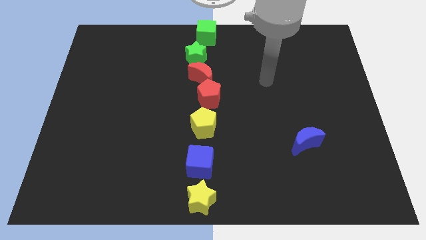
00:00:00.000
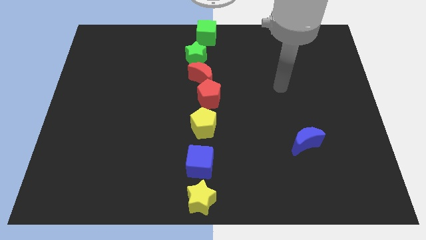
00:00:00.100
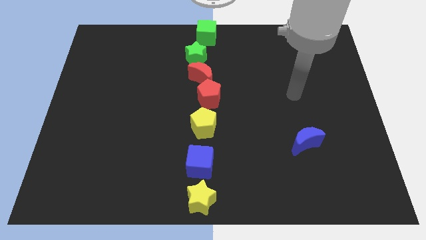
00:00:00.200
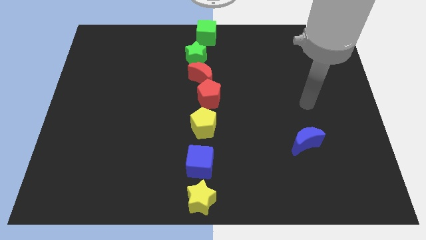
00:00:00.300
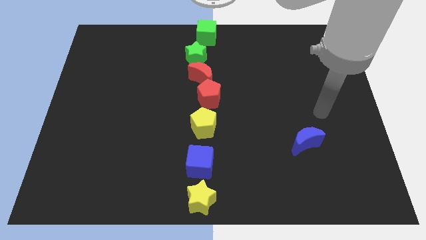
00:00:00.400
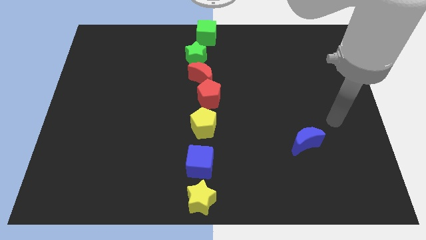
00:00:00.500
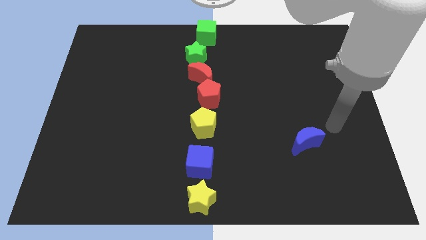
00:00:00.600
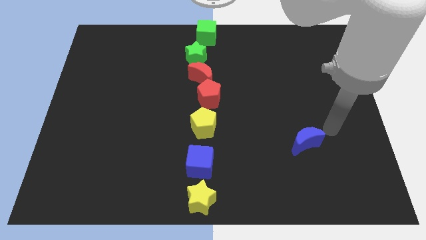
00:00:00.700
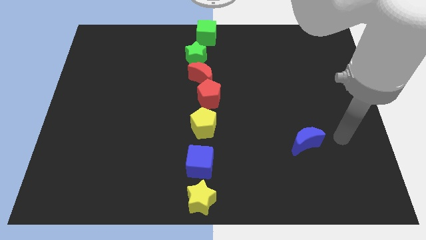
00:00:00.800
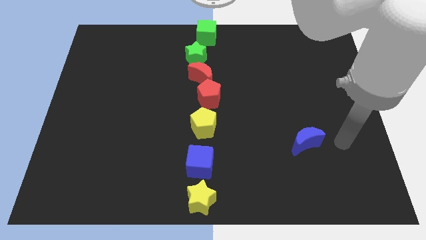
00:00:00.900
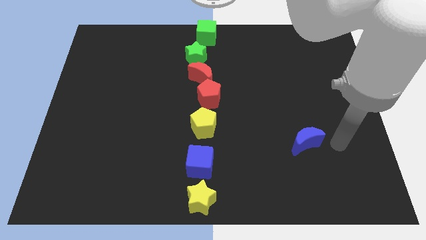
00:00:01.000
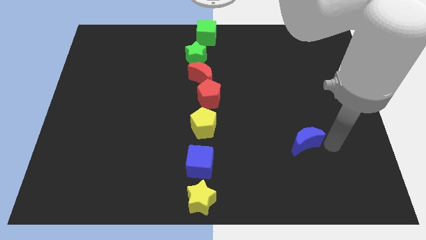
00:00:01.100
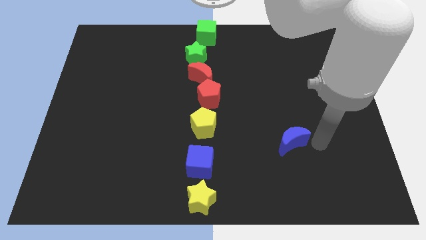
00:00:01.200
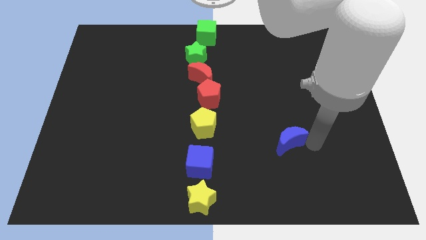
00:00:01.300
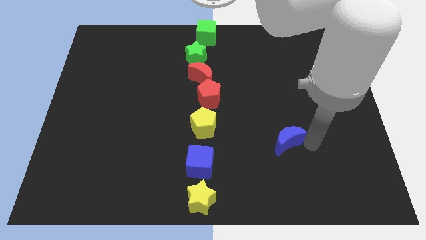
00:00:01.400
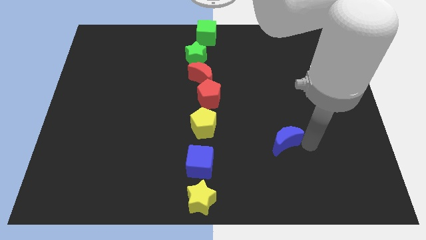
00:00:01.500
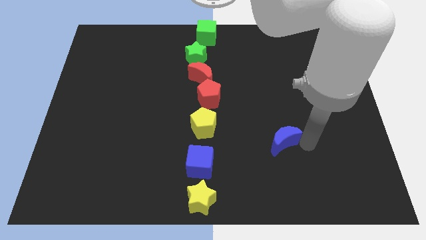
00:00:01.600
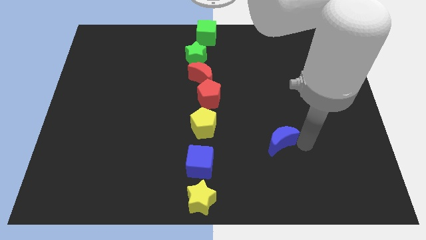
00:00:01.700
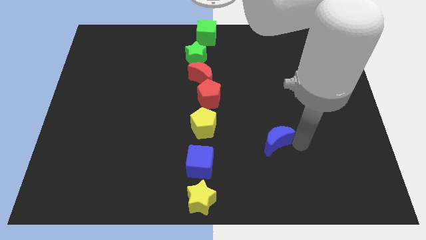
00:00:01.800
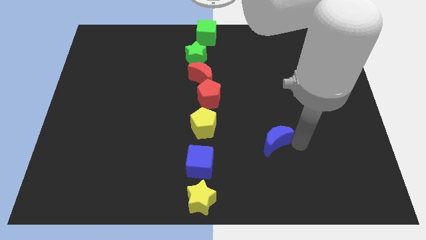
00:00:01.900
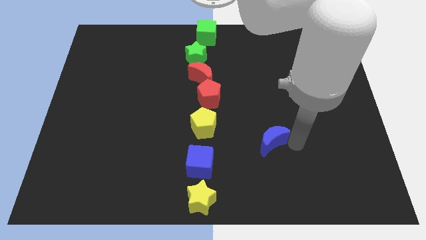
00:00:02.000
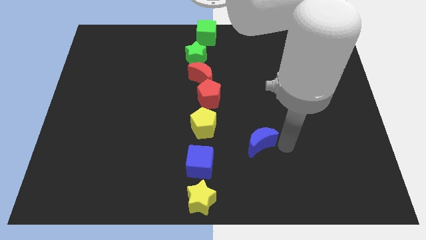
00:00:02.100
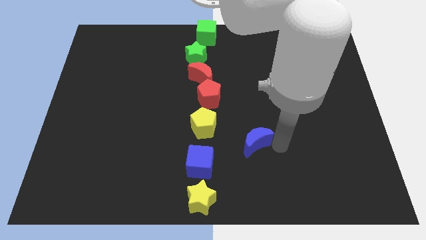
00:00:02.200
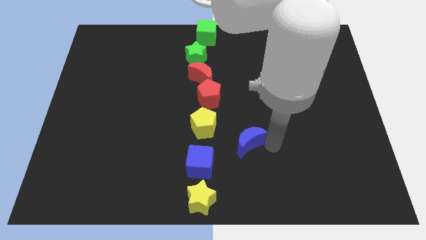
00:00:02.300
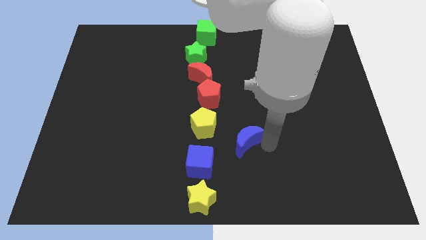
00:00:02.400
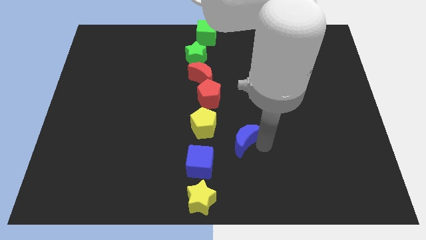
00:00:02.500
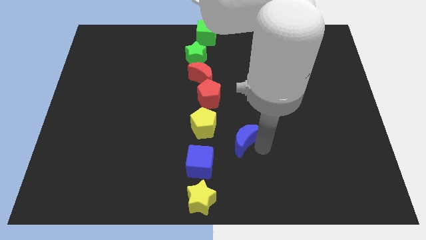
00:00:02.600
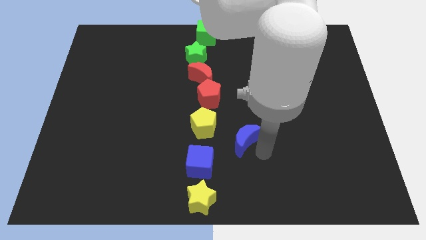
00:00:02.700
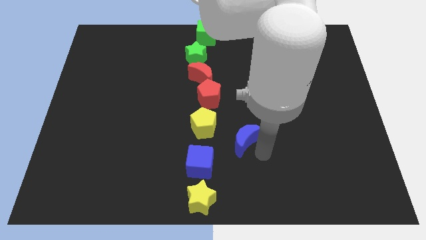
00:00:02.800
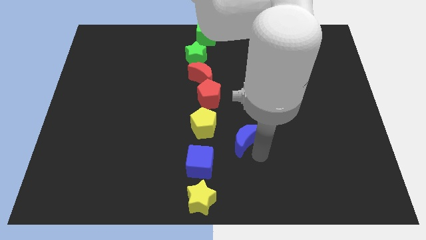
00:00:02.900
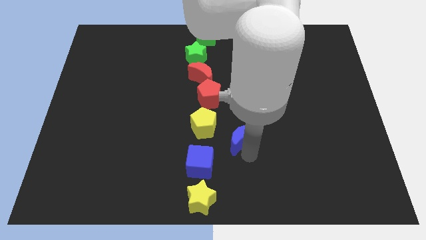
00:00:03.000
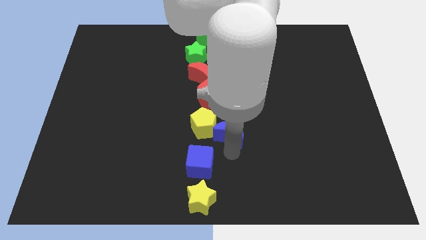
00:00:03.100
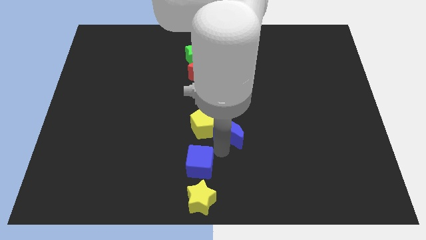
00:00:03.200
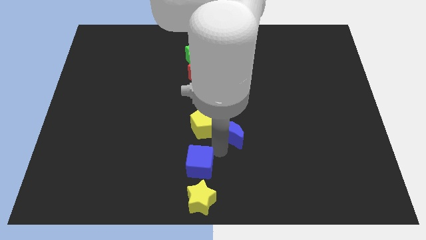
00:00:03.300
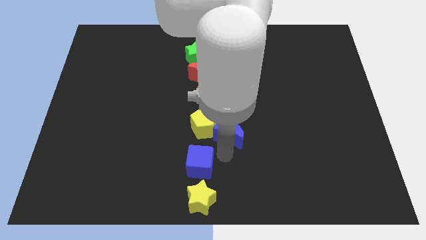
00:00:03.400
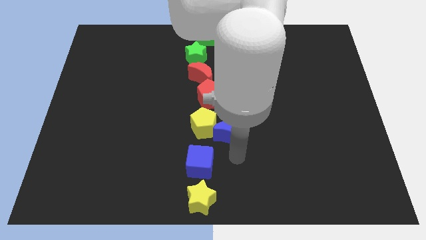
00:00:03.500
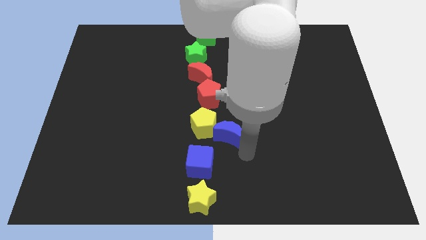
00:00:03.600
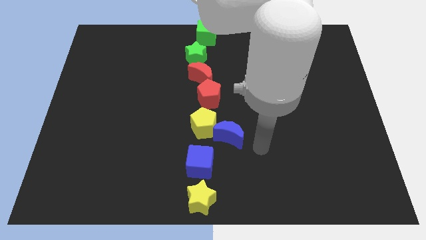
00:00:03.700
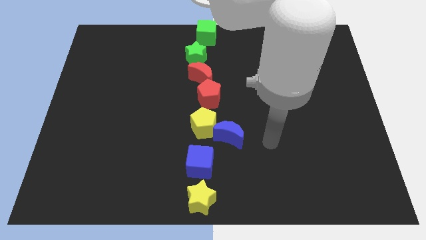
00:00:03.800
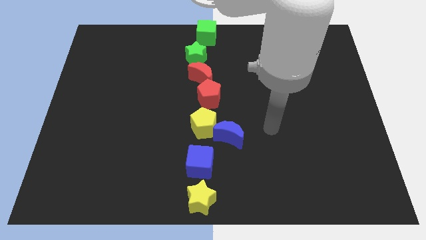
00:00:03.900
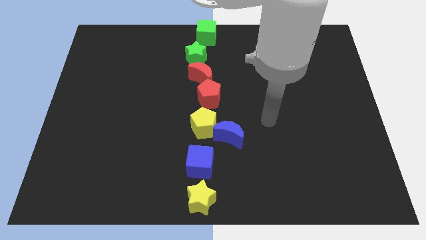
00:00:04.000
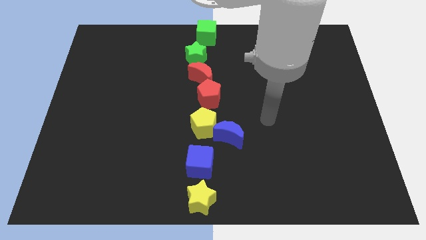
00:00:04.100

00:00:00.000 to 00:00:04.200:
move the blue moon towards the bottom right of the yellow pentagon

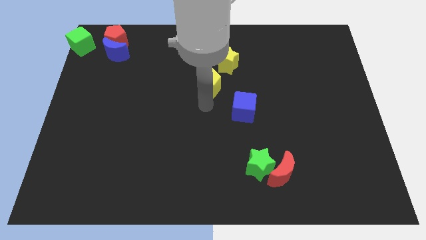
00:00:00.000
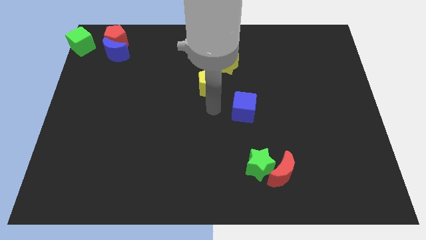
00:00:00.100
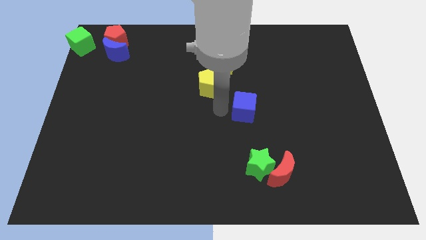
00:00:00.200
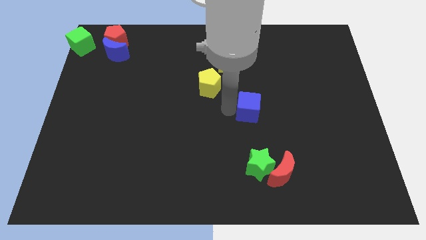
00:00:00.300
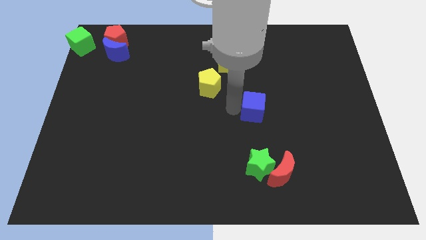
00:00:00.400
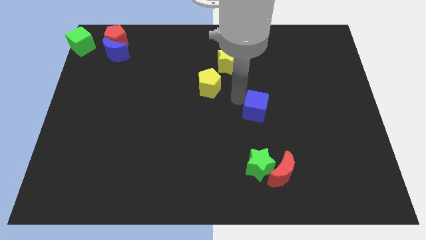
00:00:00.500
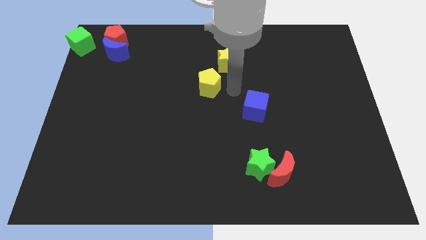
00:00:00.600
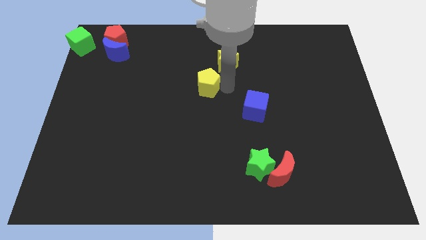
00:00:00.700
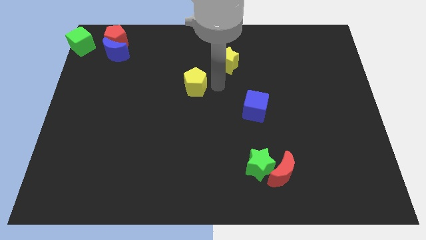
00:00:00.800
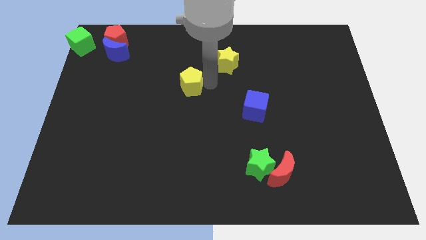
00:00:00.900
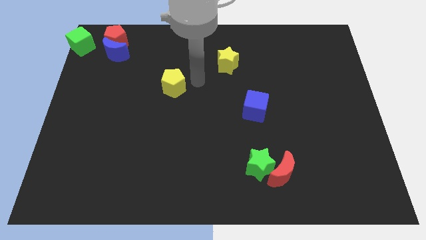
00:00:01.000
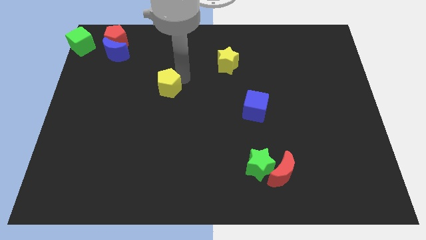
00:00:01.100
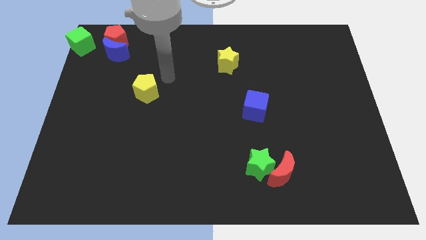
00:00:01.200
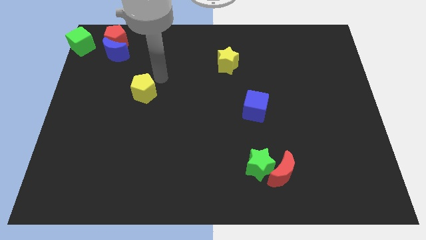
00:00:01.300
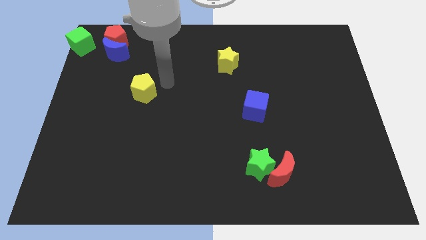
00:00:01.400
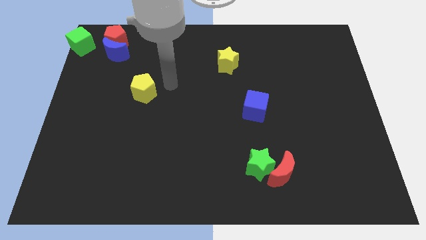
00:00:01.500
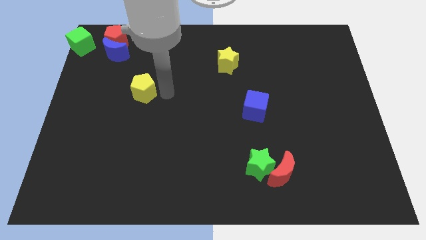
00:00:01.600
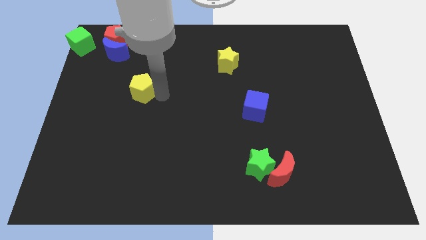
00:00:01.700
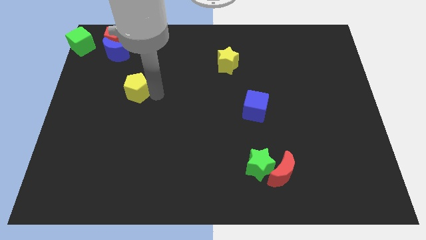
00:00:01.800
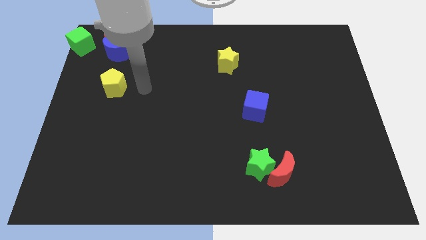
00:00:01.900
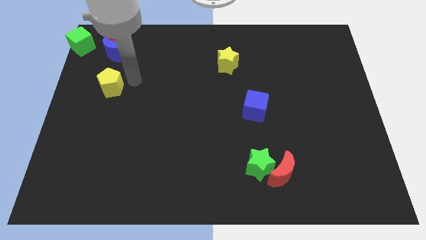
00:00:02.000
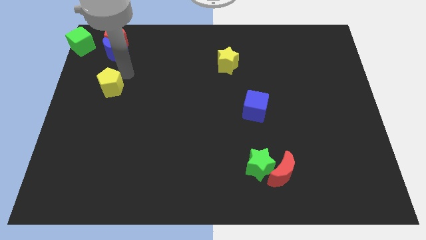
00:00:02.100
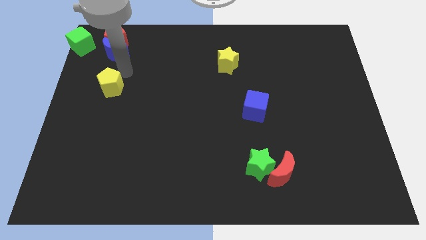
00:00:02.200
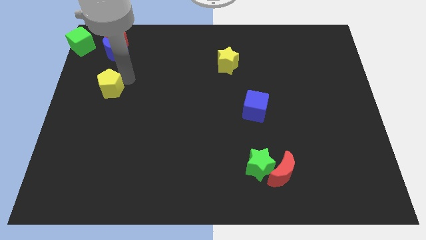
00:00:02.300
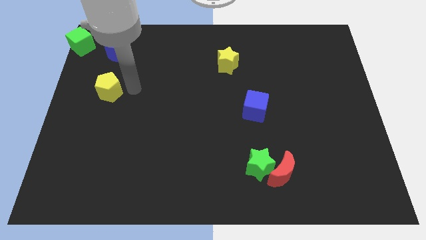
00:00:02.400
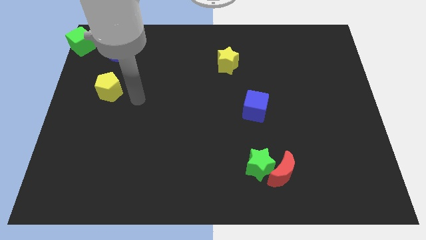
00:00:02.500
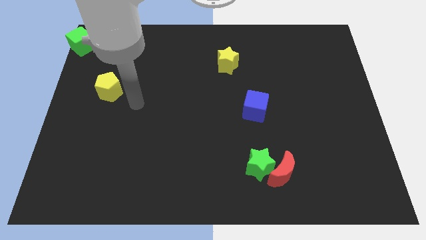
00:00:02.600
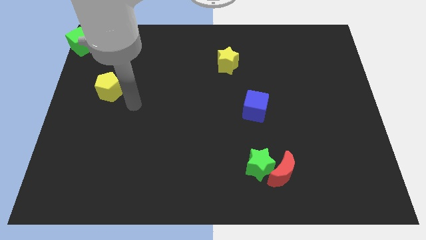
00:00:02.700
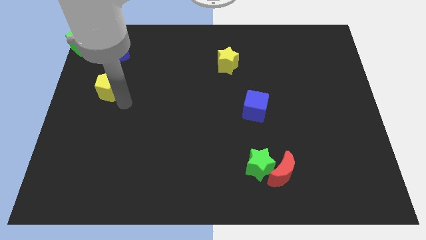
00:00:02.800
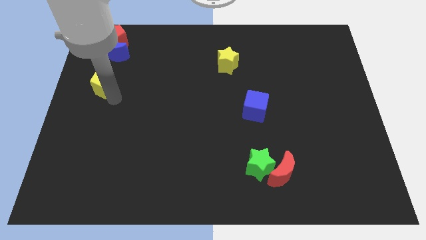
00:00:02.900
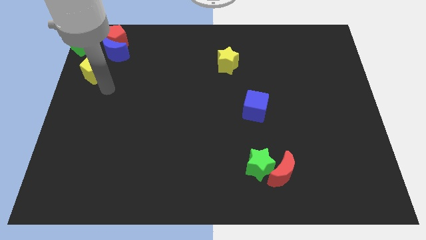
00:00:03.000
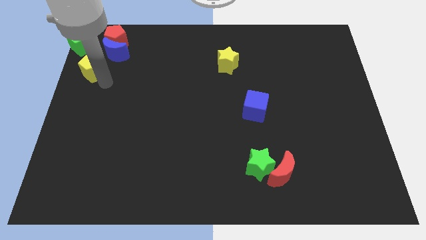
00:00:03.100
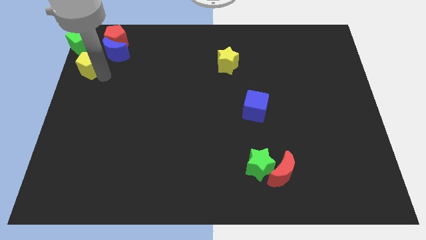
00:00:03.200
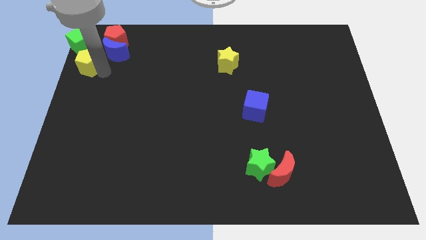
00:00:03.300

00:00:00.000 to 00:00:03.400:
move the yellow pentagon to the bottom side of the green cube

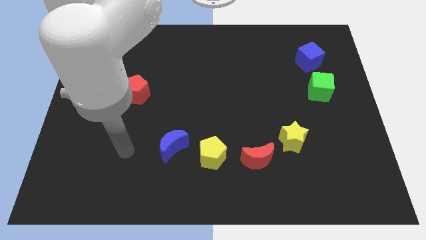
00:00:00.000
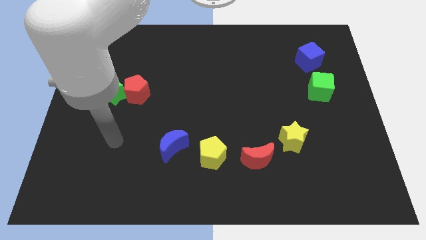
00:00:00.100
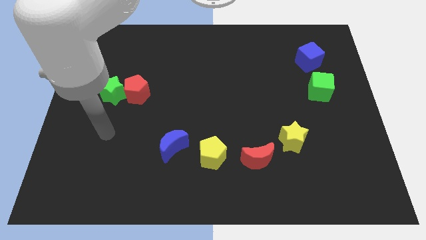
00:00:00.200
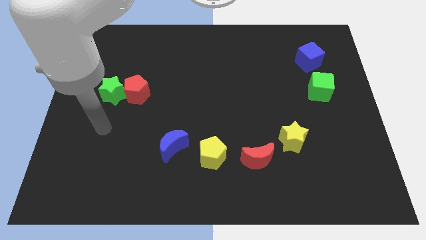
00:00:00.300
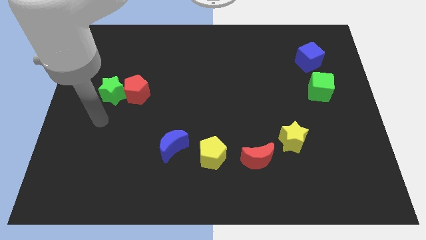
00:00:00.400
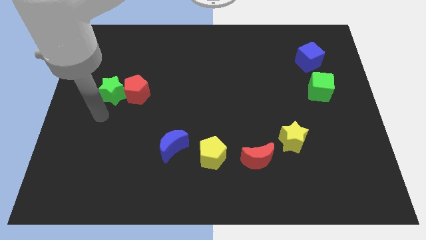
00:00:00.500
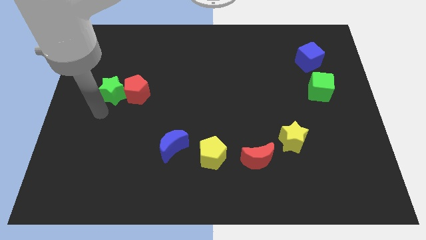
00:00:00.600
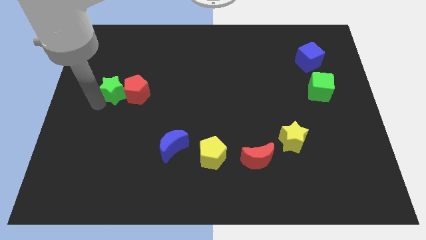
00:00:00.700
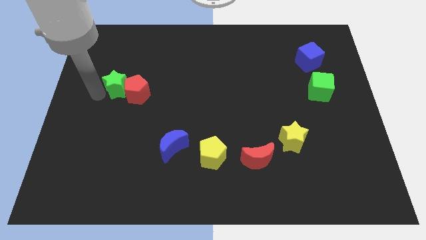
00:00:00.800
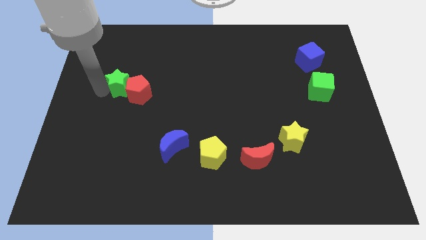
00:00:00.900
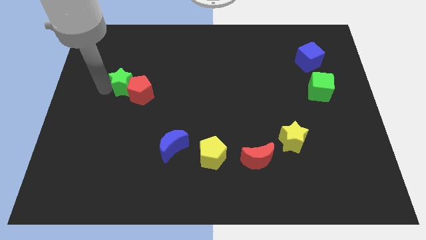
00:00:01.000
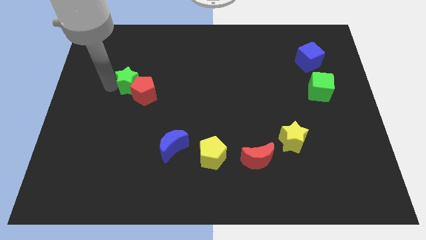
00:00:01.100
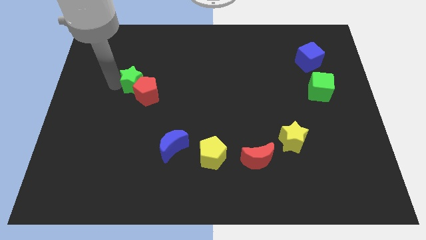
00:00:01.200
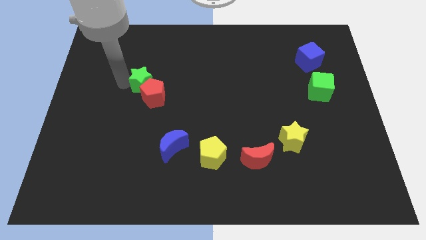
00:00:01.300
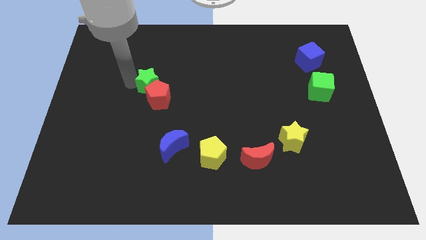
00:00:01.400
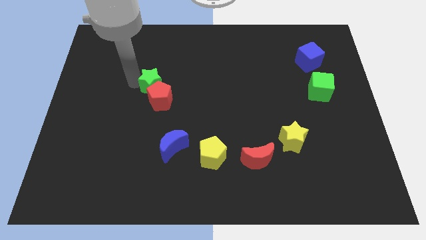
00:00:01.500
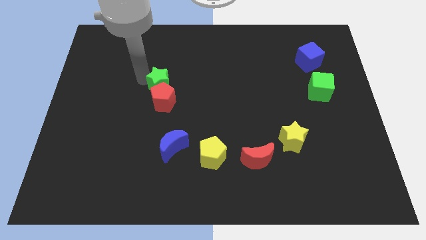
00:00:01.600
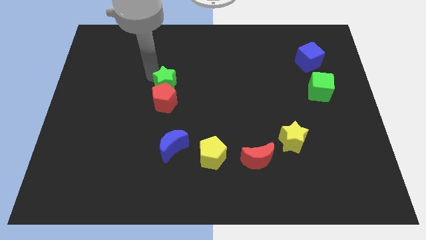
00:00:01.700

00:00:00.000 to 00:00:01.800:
push the green star along with the red pentagon above the blue moon
